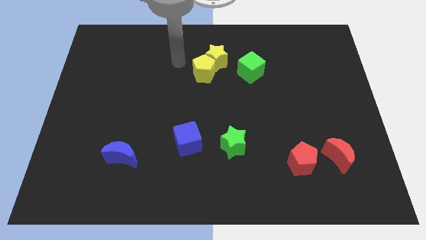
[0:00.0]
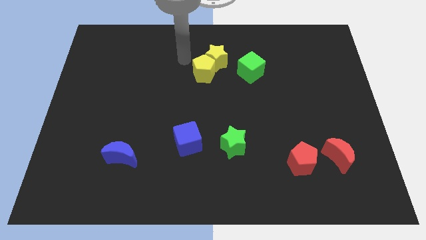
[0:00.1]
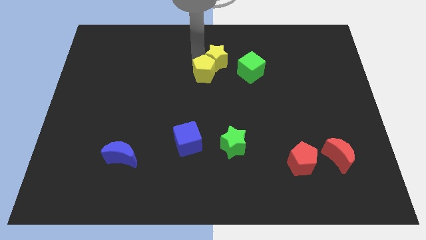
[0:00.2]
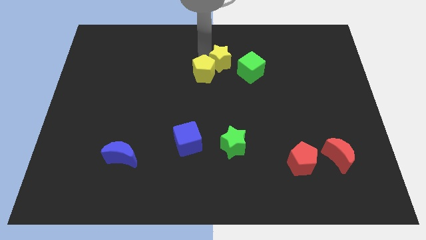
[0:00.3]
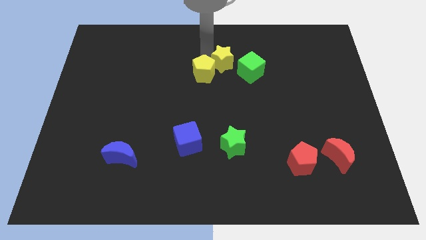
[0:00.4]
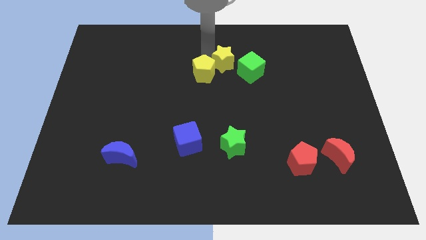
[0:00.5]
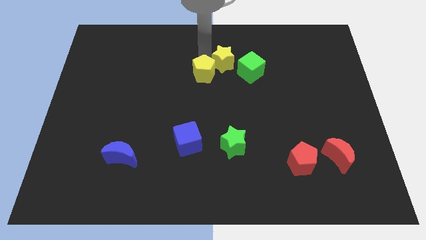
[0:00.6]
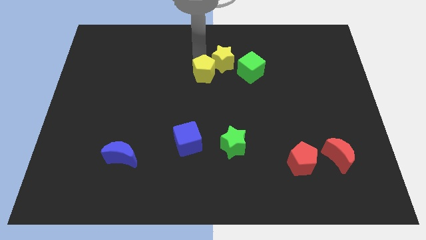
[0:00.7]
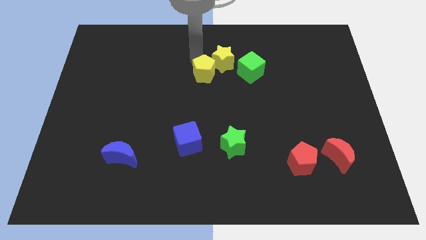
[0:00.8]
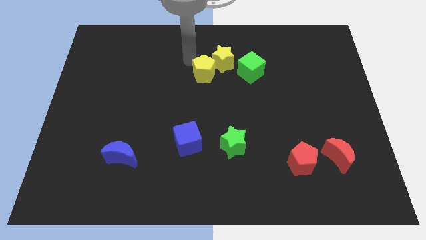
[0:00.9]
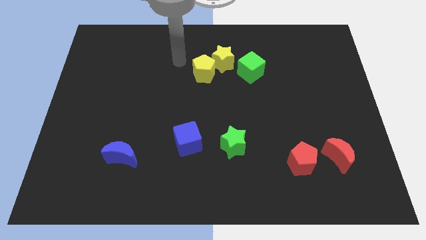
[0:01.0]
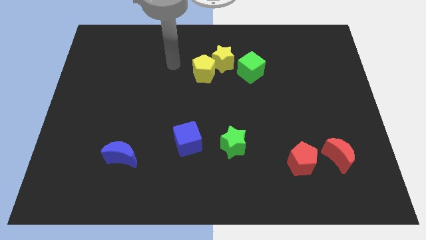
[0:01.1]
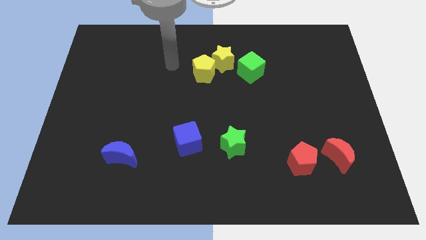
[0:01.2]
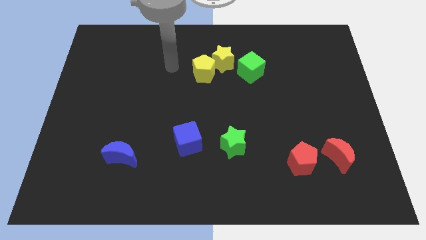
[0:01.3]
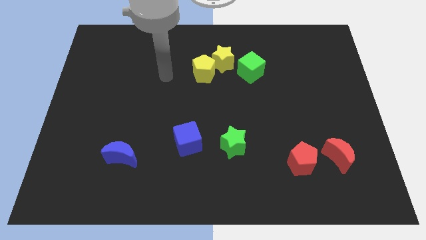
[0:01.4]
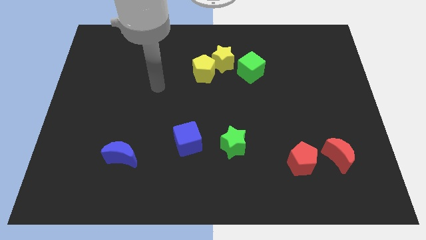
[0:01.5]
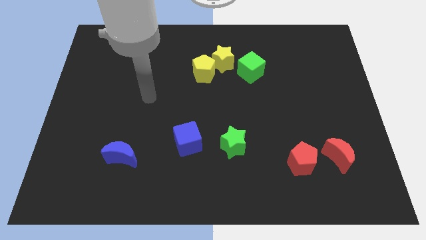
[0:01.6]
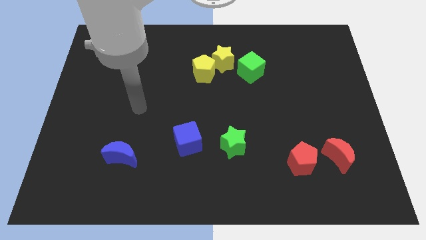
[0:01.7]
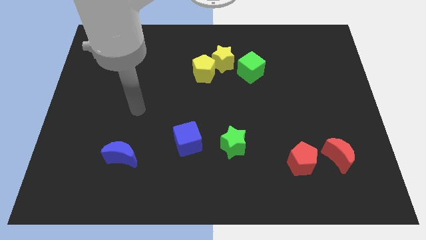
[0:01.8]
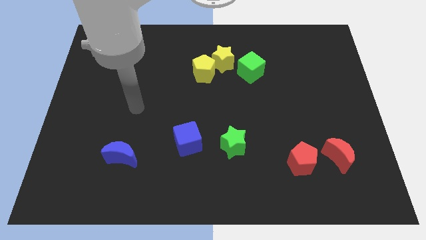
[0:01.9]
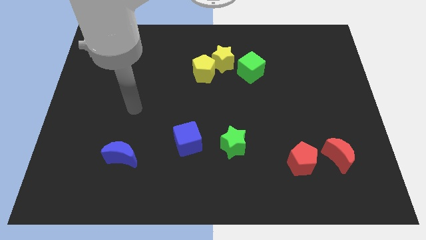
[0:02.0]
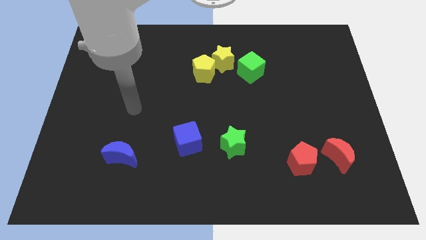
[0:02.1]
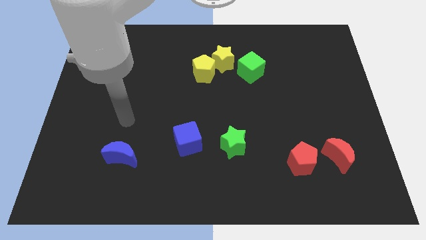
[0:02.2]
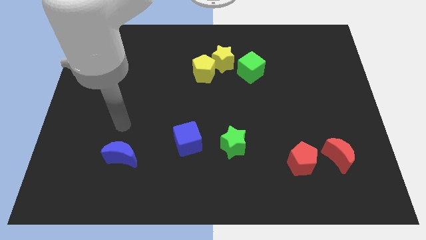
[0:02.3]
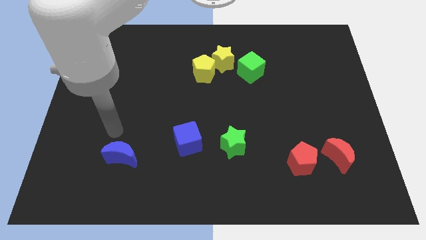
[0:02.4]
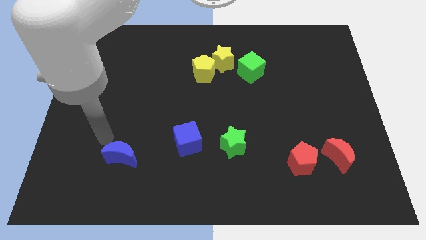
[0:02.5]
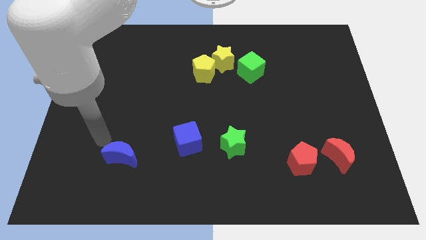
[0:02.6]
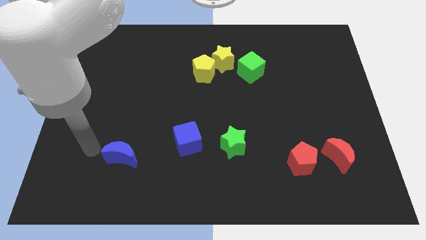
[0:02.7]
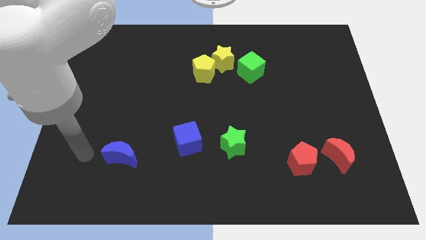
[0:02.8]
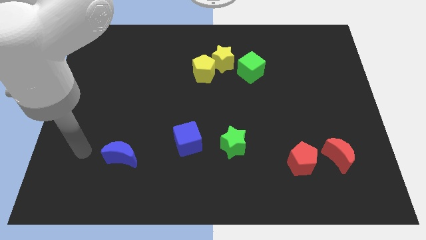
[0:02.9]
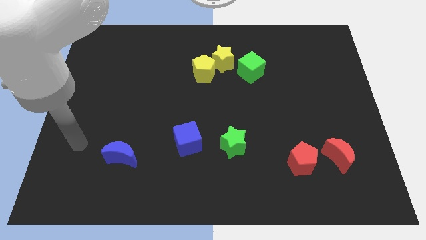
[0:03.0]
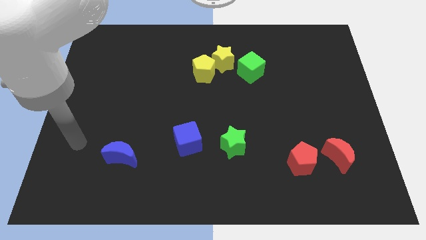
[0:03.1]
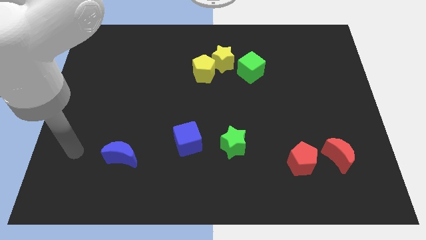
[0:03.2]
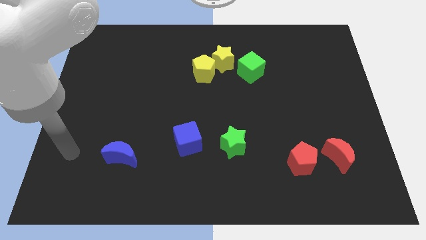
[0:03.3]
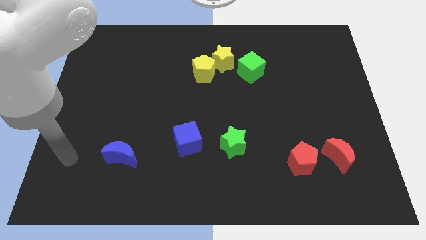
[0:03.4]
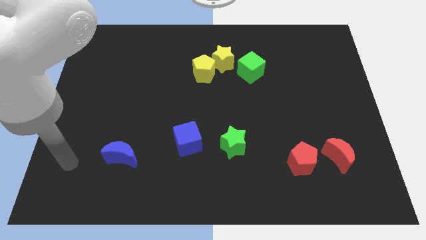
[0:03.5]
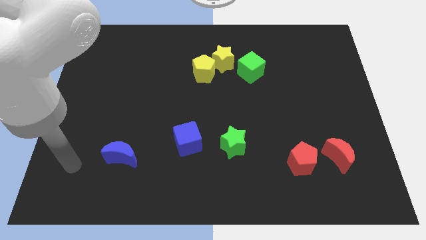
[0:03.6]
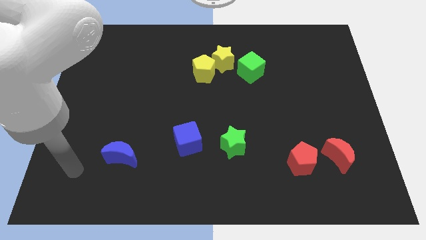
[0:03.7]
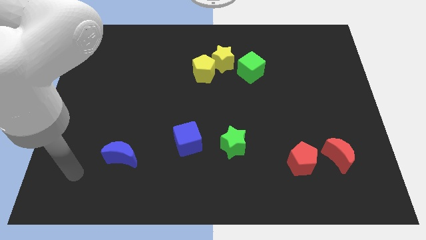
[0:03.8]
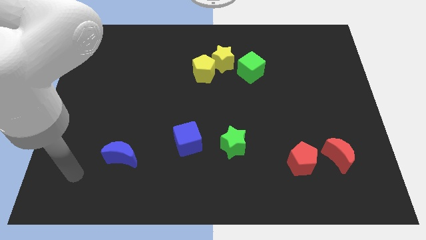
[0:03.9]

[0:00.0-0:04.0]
move the yellow star slightly to the right

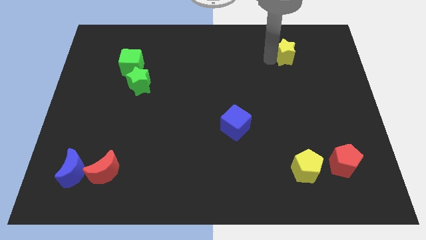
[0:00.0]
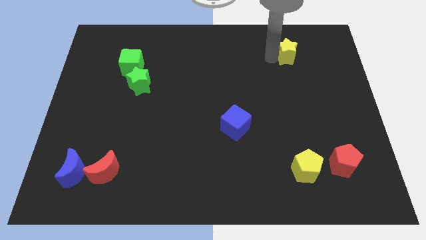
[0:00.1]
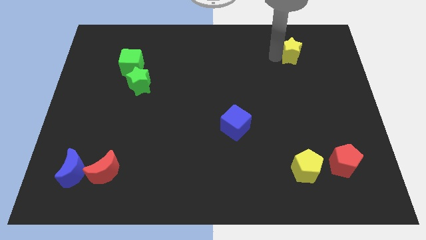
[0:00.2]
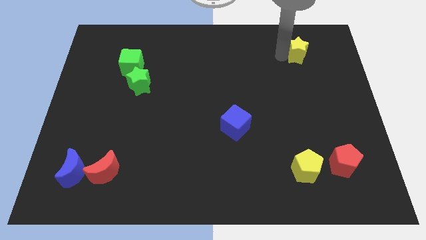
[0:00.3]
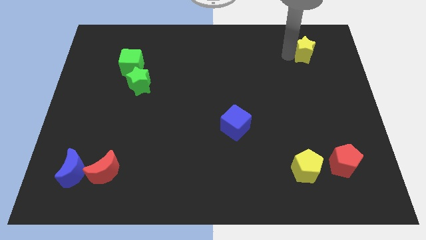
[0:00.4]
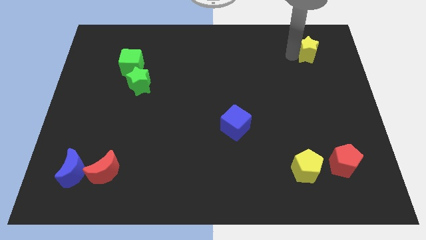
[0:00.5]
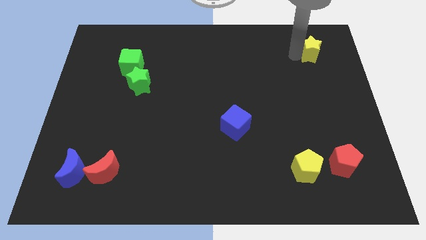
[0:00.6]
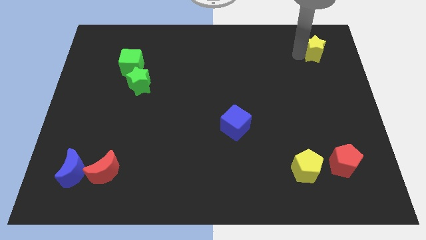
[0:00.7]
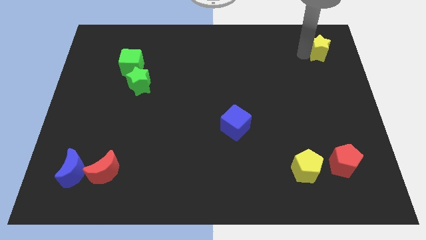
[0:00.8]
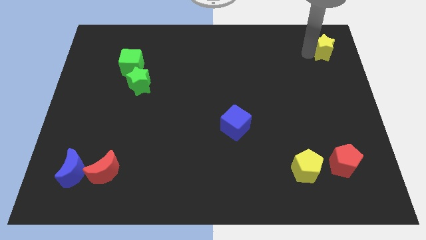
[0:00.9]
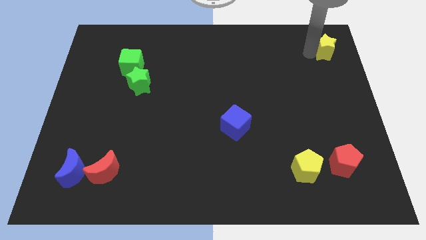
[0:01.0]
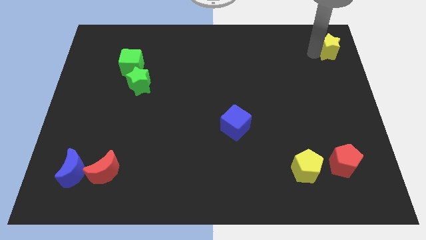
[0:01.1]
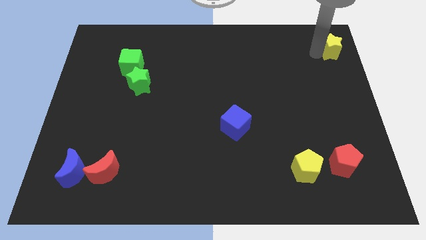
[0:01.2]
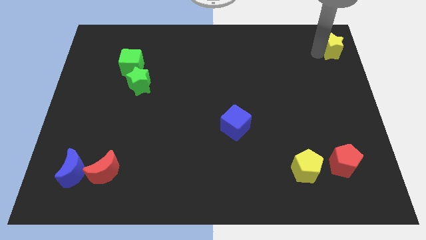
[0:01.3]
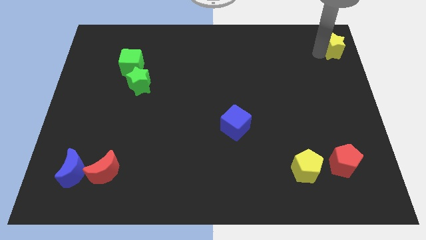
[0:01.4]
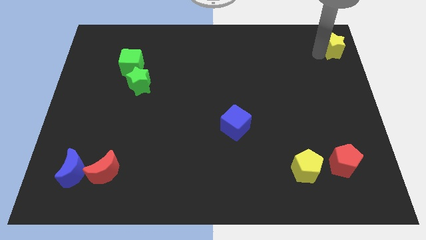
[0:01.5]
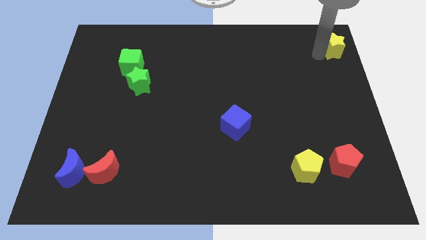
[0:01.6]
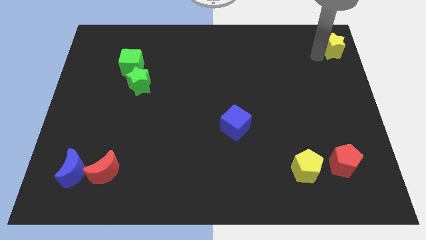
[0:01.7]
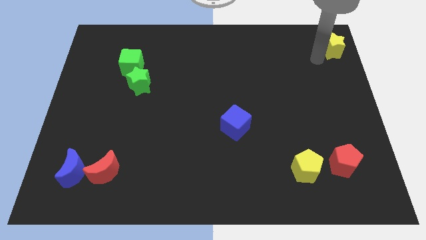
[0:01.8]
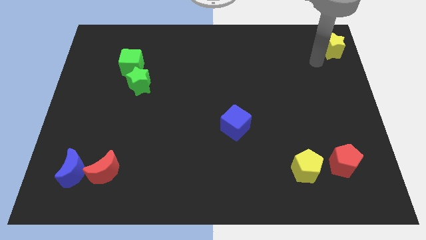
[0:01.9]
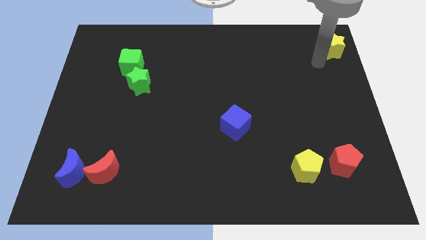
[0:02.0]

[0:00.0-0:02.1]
drag the yellow star towards the top right corner

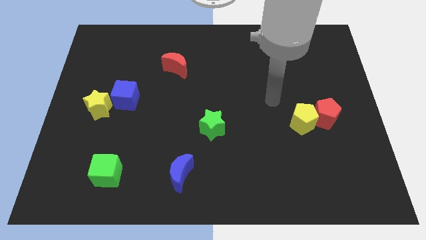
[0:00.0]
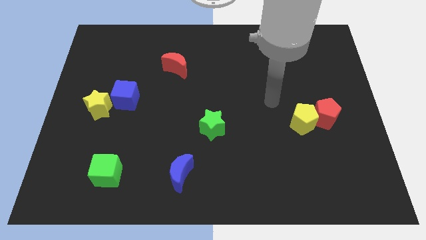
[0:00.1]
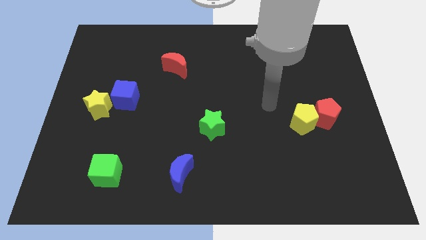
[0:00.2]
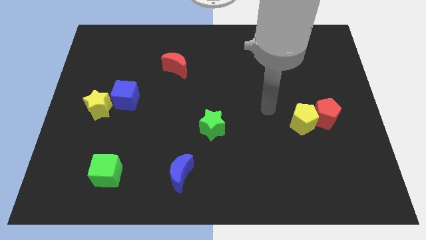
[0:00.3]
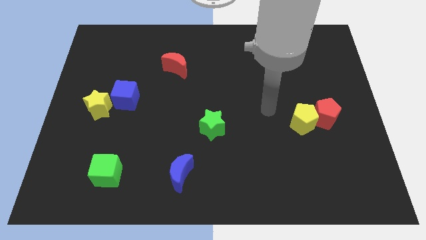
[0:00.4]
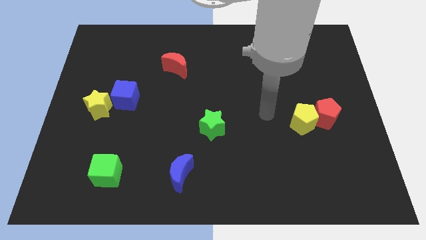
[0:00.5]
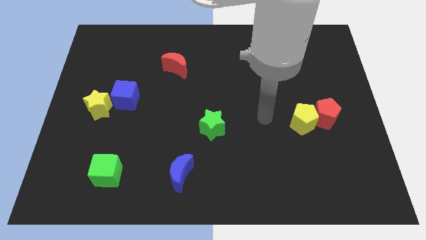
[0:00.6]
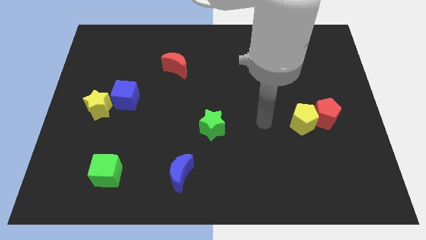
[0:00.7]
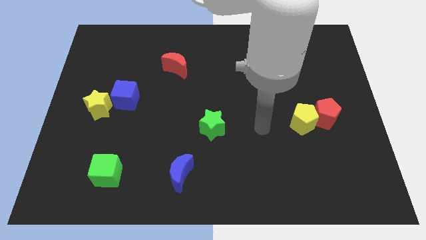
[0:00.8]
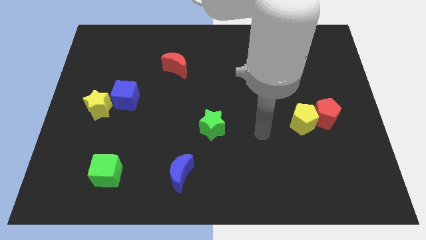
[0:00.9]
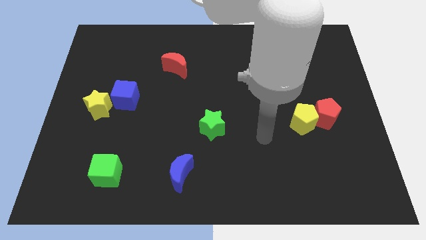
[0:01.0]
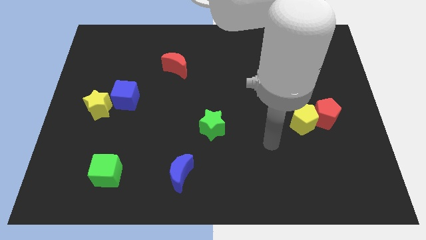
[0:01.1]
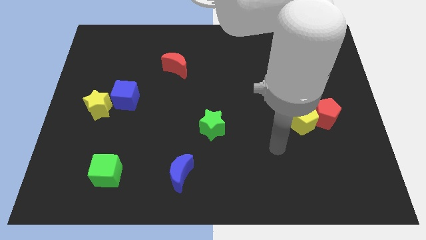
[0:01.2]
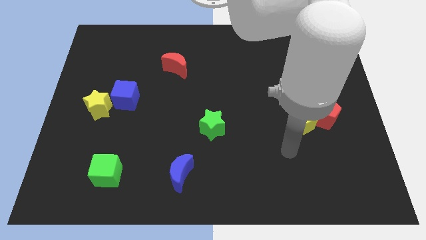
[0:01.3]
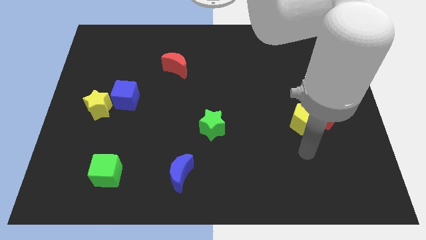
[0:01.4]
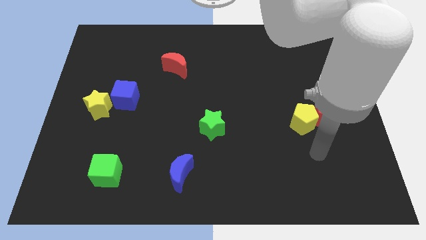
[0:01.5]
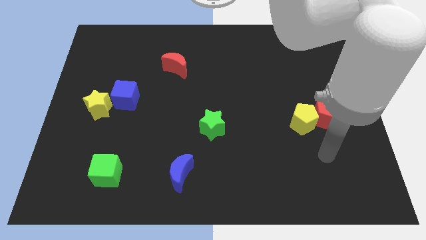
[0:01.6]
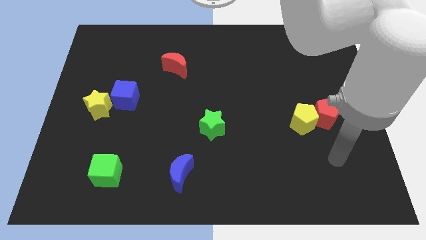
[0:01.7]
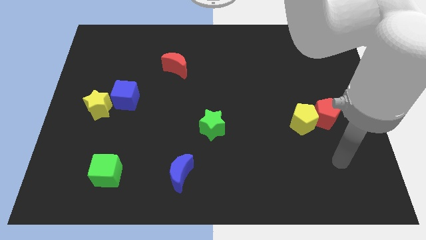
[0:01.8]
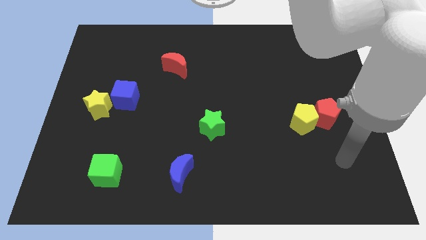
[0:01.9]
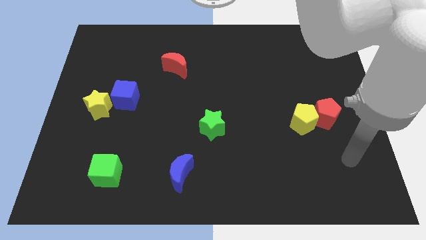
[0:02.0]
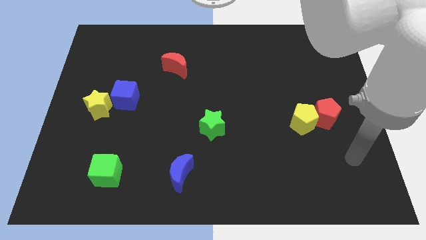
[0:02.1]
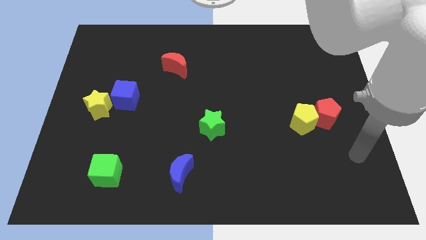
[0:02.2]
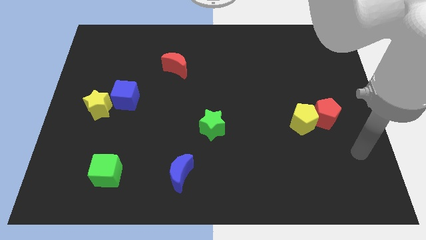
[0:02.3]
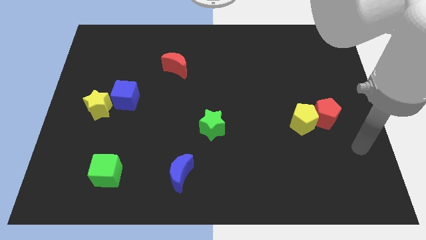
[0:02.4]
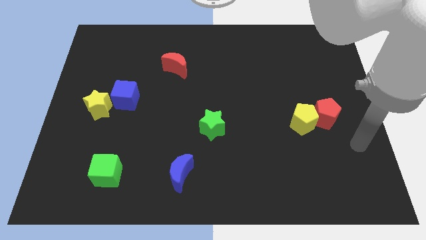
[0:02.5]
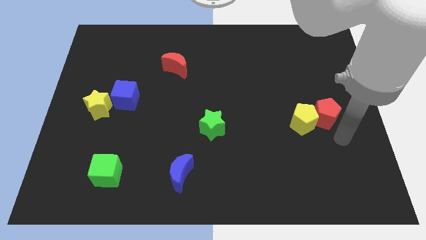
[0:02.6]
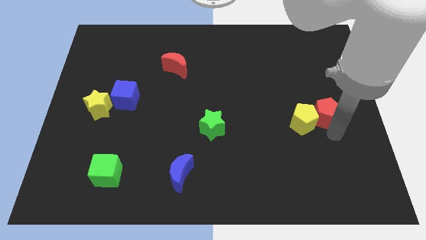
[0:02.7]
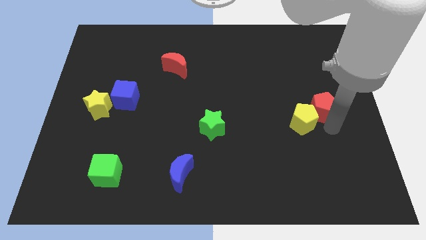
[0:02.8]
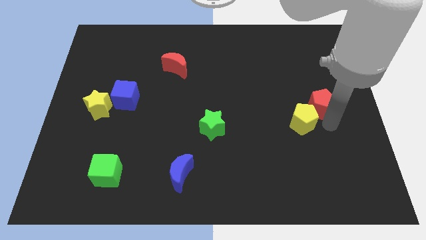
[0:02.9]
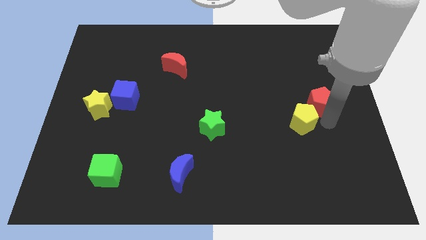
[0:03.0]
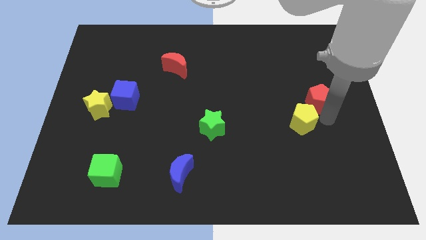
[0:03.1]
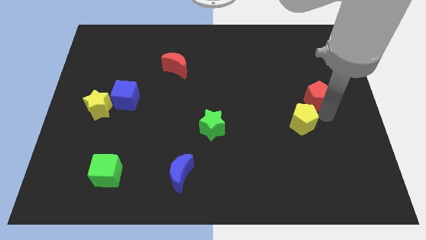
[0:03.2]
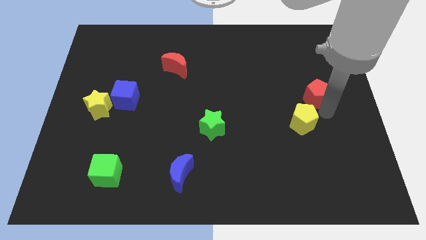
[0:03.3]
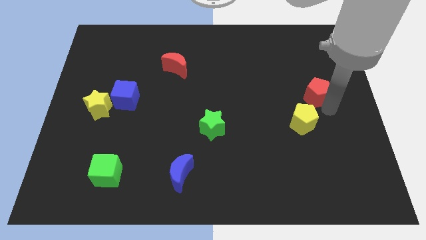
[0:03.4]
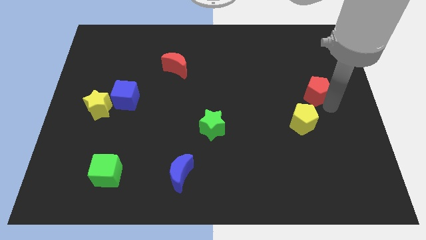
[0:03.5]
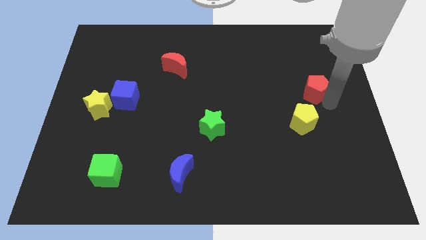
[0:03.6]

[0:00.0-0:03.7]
separate the red pentagon from the yellow pentagon
